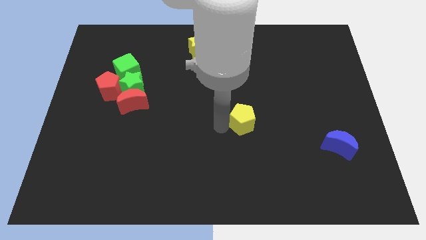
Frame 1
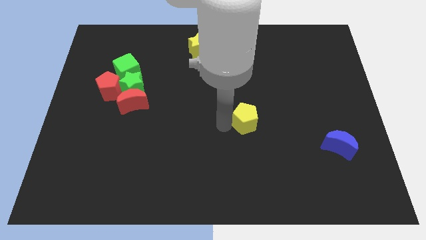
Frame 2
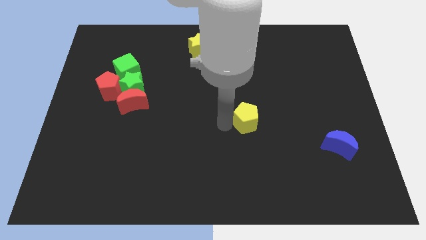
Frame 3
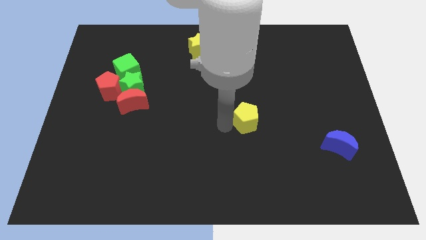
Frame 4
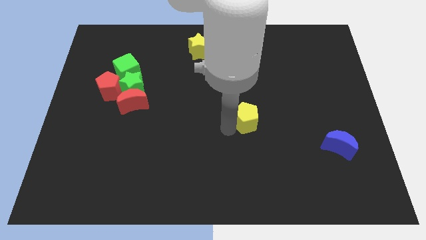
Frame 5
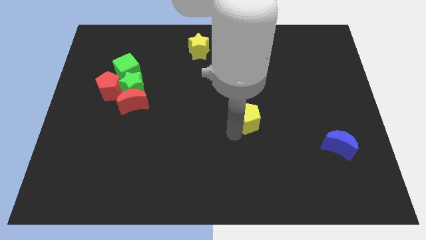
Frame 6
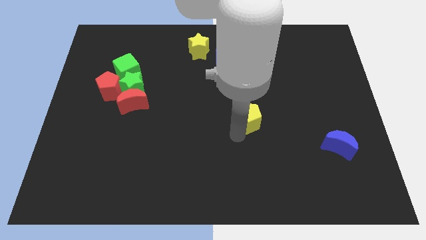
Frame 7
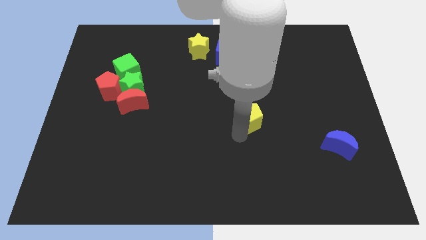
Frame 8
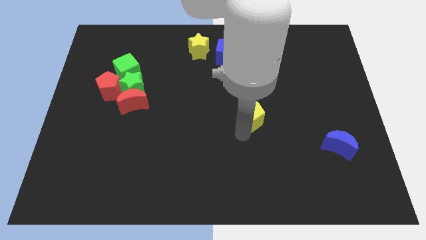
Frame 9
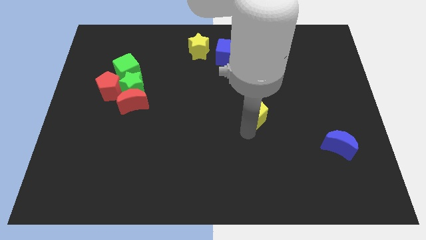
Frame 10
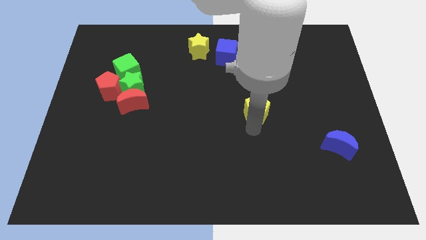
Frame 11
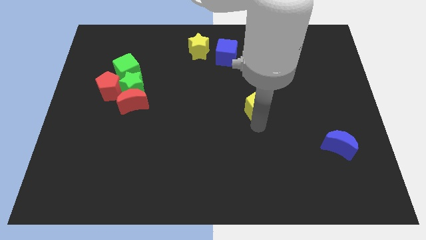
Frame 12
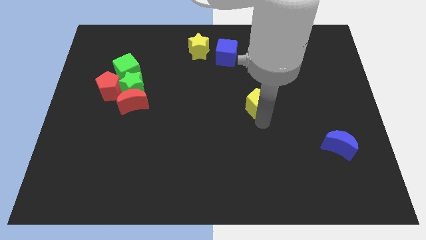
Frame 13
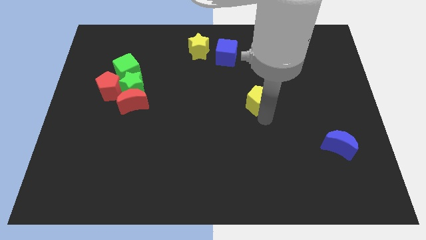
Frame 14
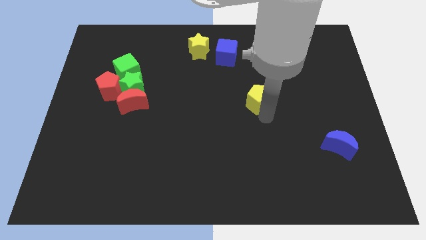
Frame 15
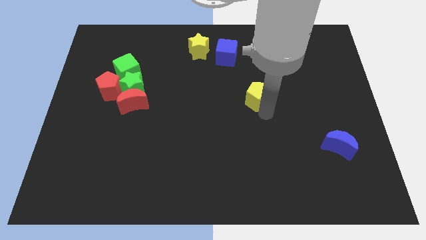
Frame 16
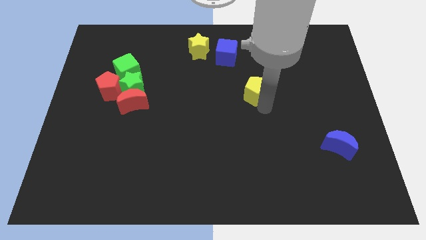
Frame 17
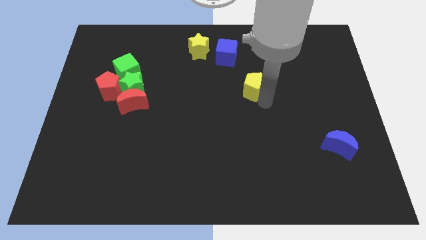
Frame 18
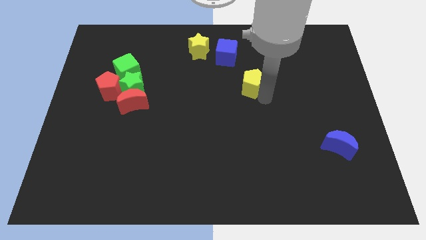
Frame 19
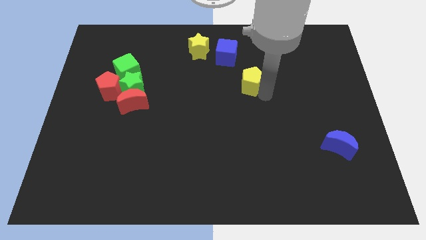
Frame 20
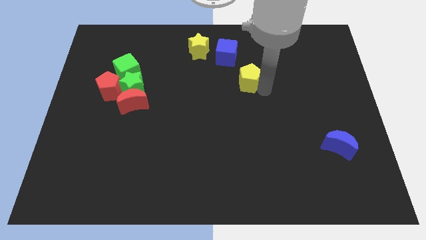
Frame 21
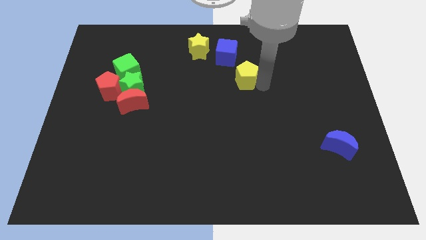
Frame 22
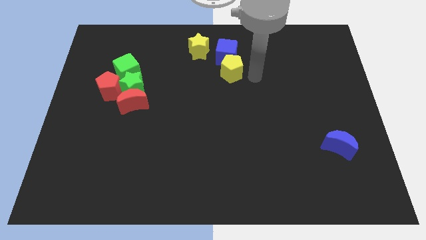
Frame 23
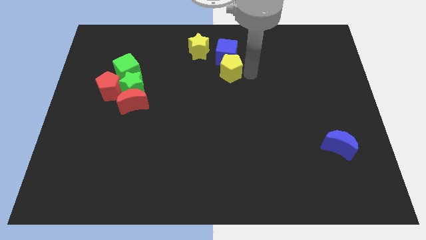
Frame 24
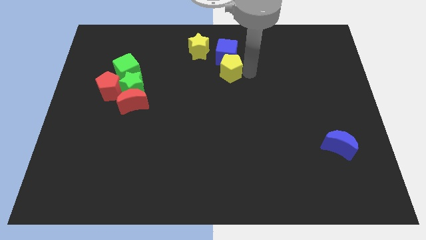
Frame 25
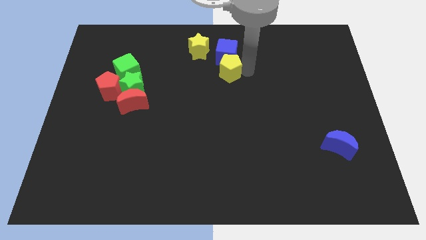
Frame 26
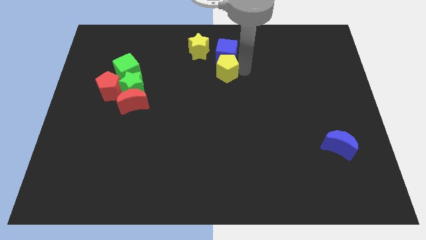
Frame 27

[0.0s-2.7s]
move the yellow pentagon down to the blue cube

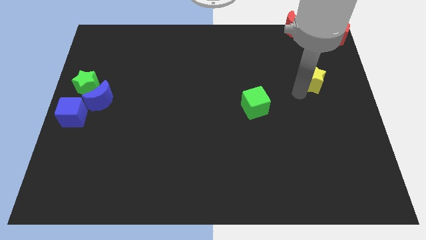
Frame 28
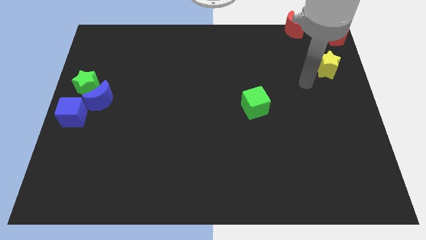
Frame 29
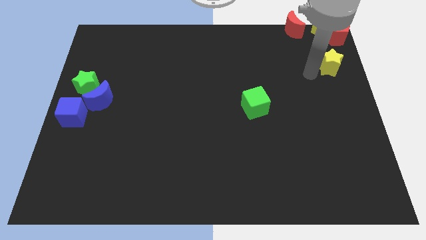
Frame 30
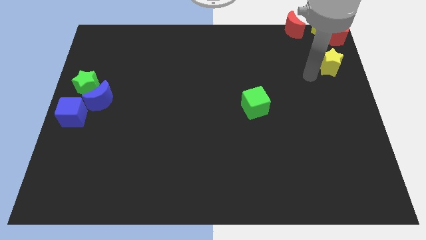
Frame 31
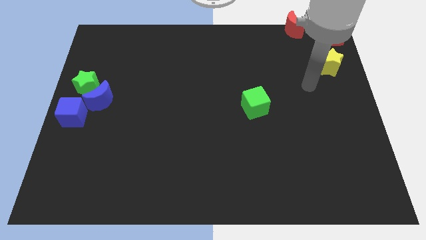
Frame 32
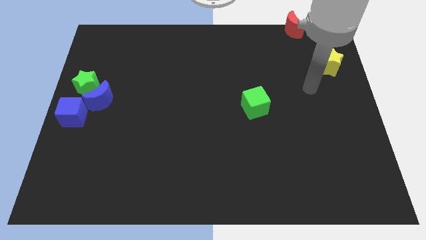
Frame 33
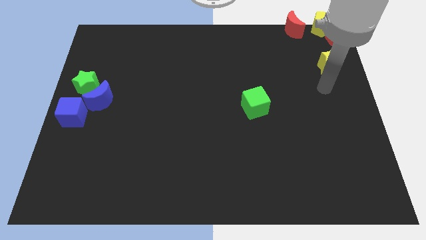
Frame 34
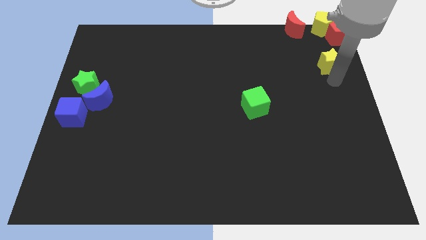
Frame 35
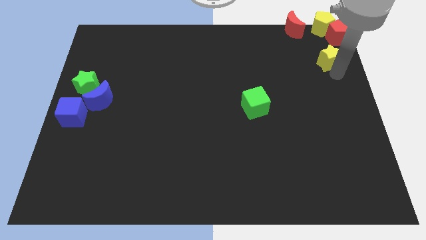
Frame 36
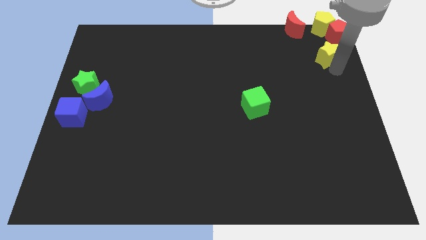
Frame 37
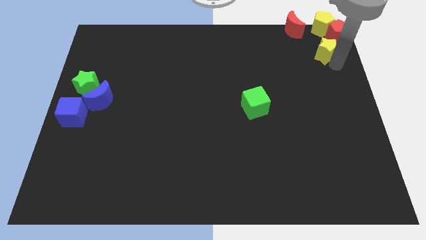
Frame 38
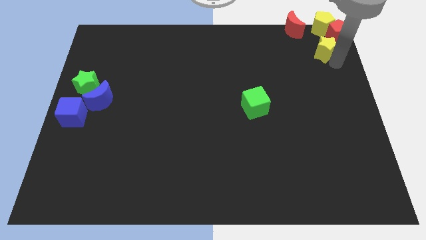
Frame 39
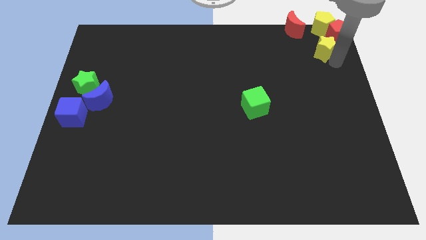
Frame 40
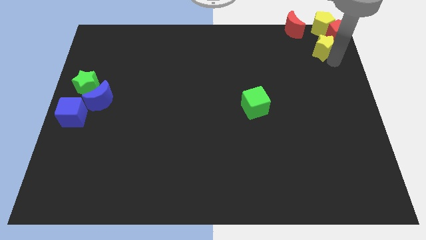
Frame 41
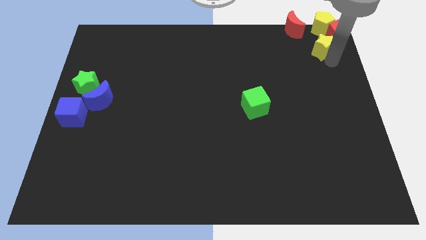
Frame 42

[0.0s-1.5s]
move the yellow star into red pentagon

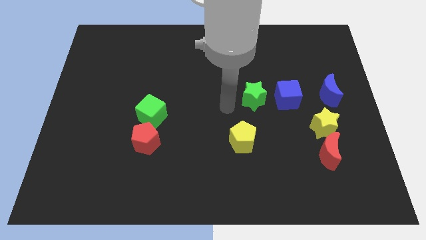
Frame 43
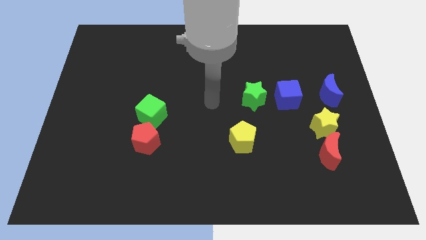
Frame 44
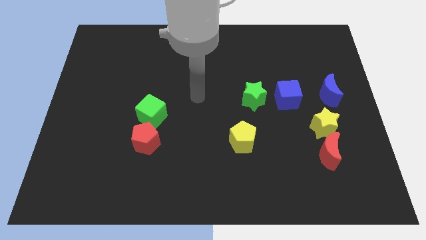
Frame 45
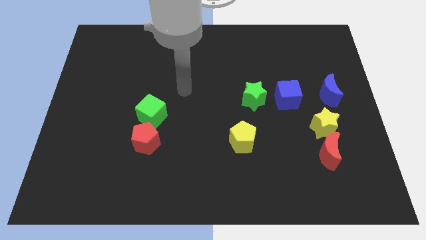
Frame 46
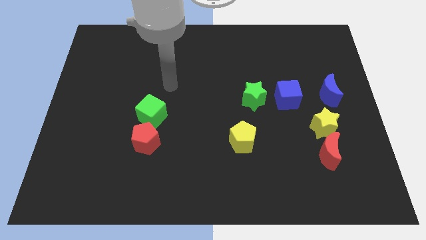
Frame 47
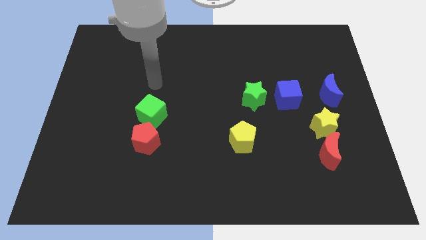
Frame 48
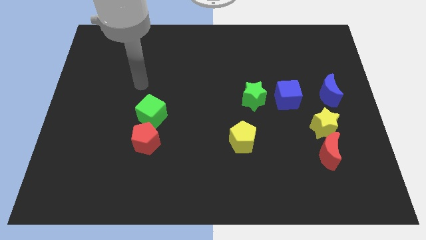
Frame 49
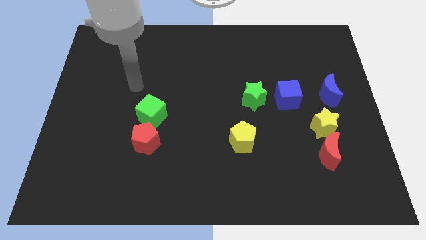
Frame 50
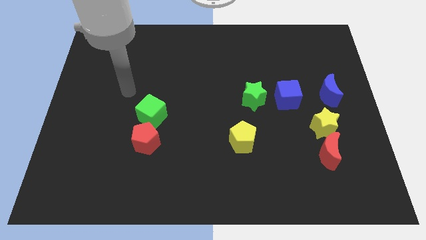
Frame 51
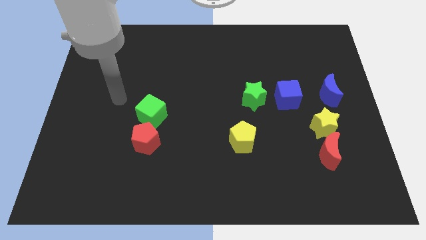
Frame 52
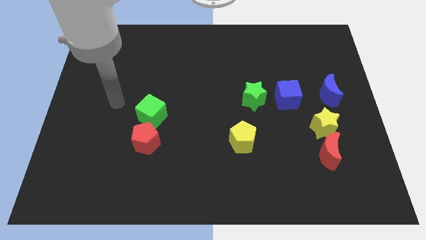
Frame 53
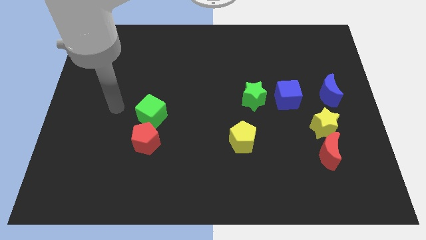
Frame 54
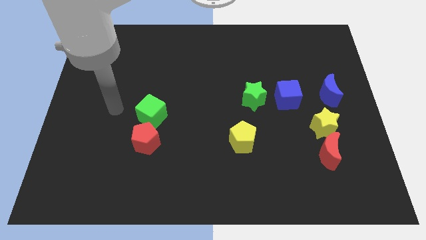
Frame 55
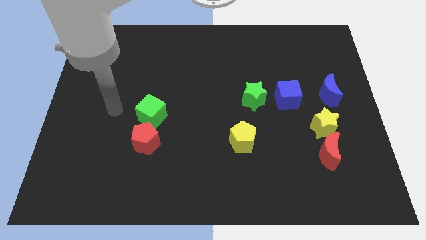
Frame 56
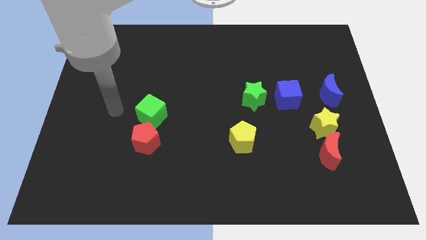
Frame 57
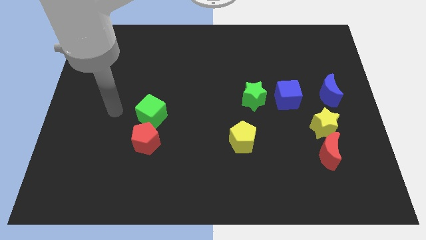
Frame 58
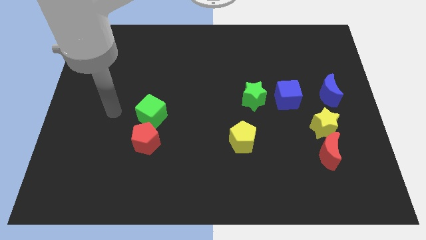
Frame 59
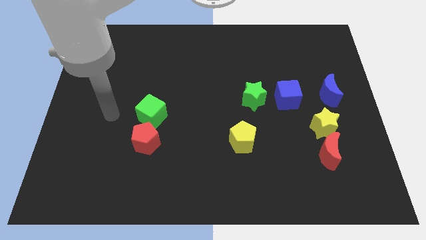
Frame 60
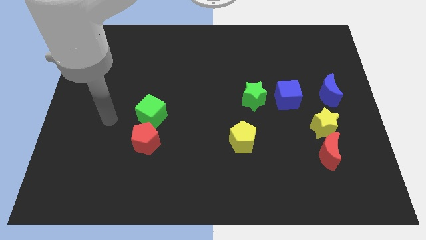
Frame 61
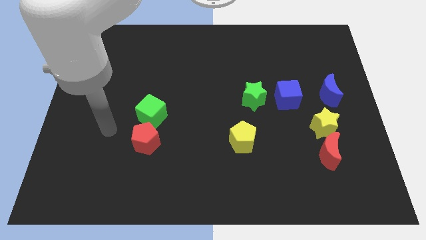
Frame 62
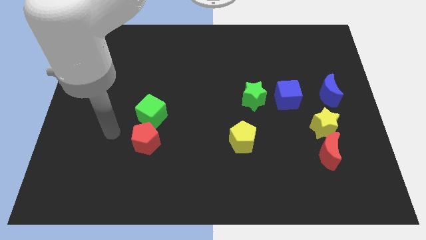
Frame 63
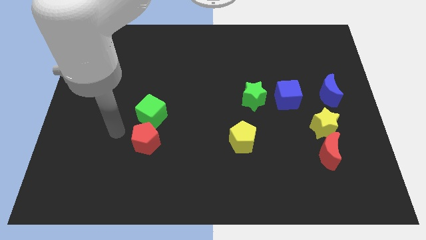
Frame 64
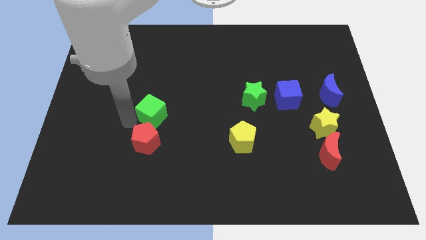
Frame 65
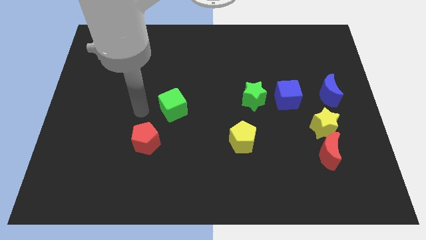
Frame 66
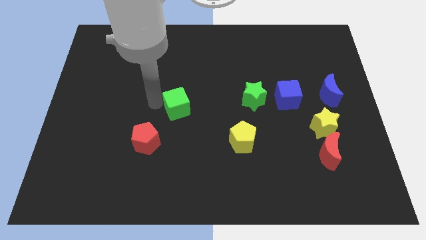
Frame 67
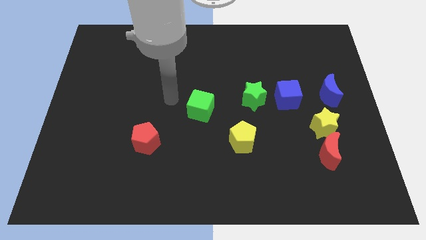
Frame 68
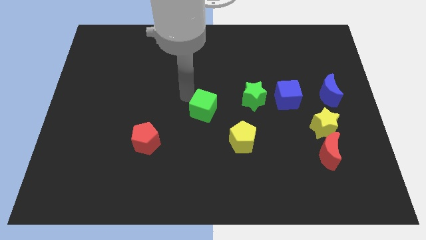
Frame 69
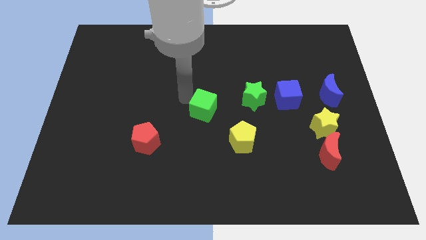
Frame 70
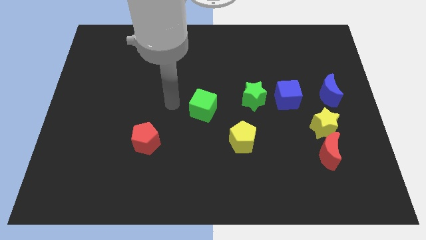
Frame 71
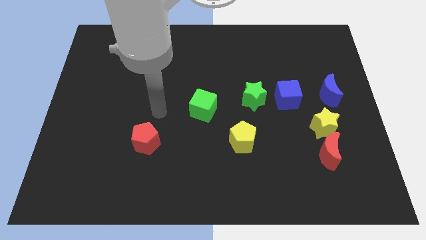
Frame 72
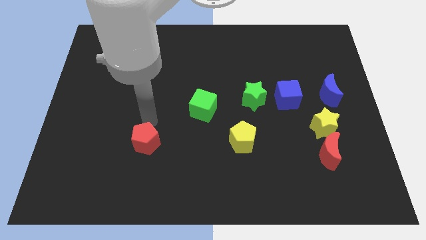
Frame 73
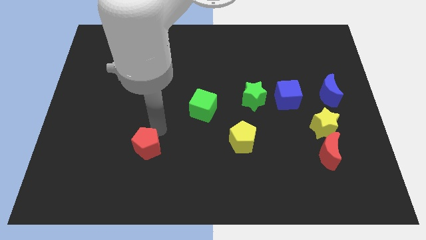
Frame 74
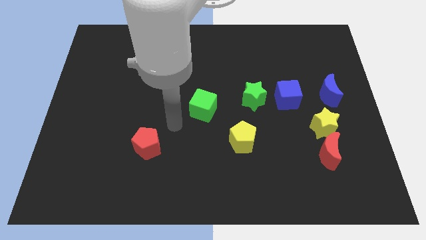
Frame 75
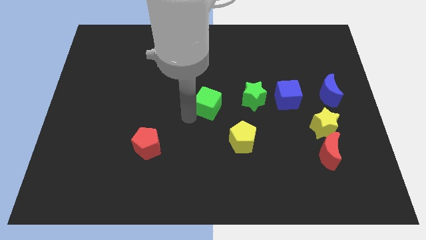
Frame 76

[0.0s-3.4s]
move the green cube diagonally on the top right side of the red pentagon

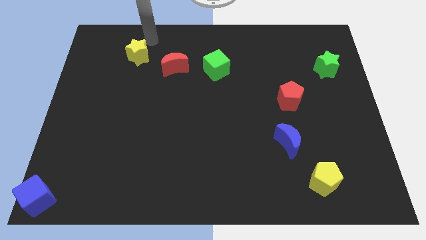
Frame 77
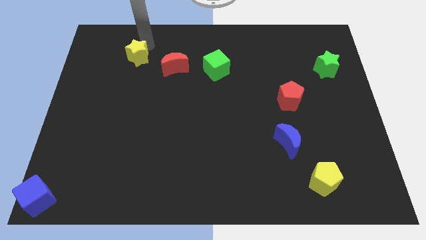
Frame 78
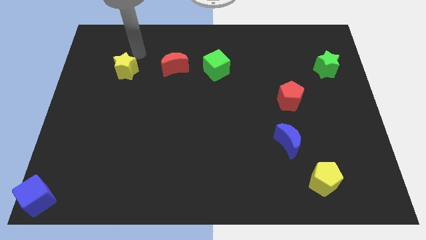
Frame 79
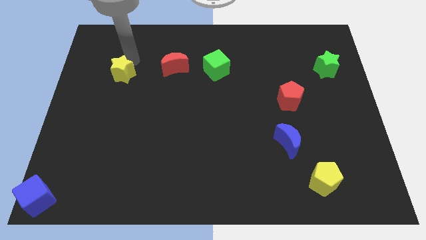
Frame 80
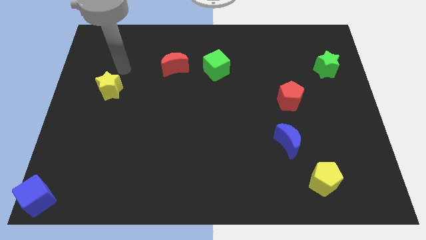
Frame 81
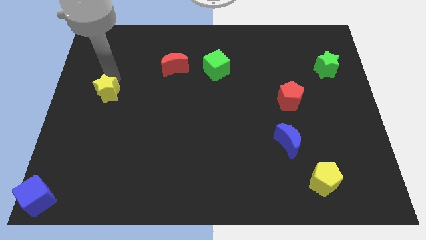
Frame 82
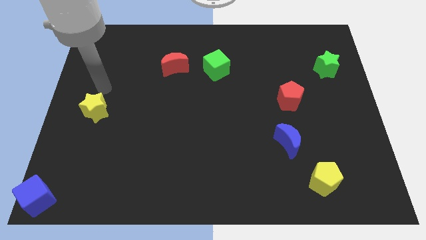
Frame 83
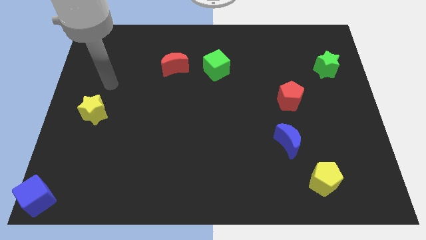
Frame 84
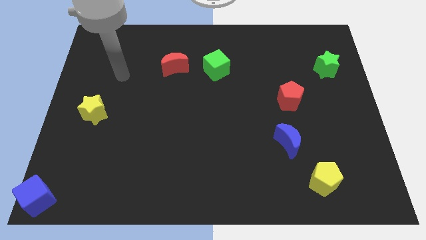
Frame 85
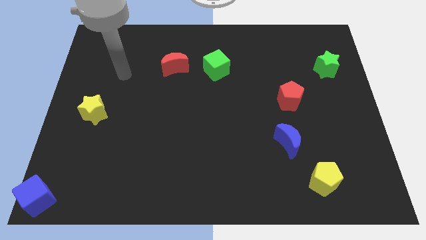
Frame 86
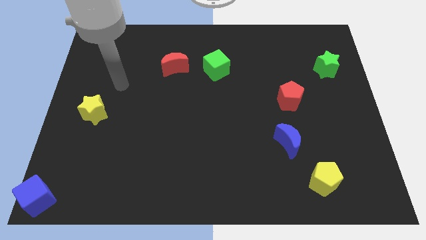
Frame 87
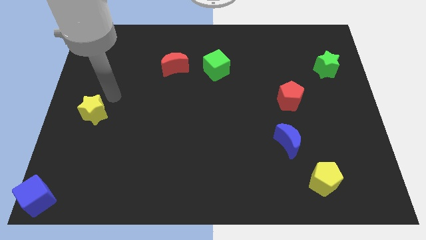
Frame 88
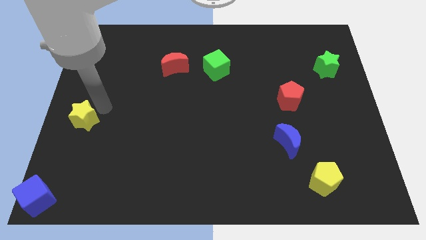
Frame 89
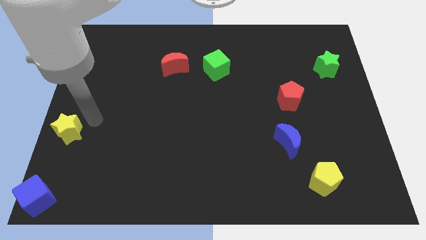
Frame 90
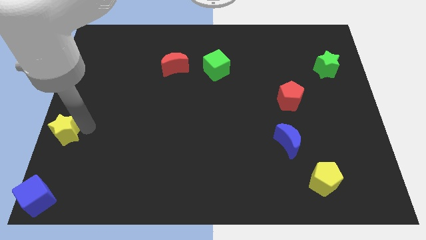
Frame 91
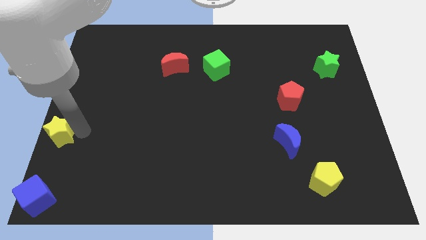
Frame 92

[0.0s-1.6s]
move the yellow star toward the bottom left
